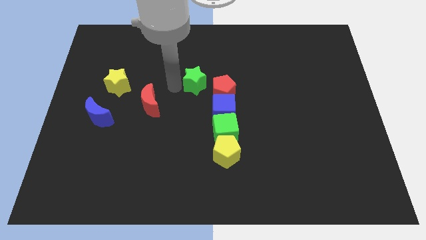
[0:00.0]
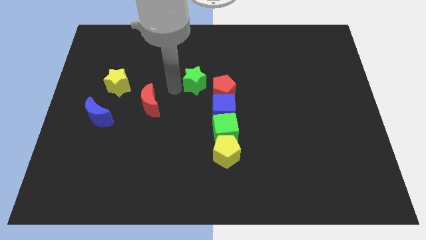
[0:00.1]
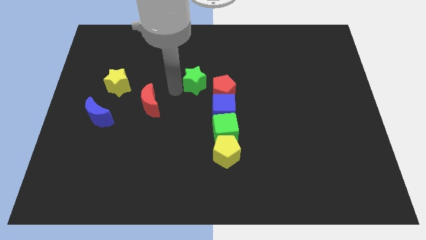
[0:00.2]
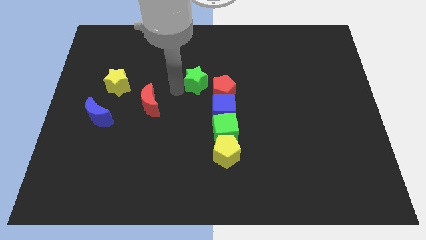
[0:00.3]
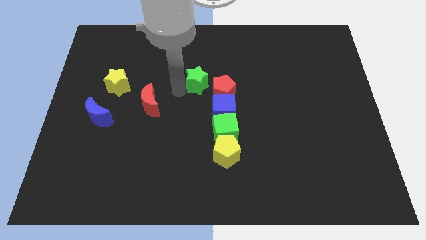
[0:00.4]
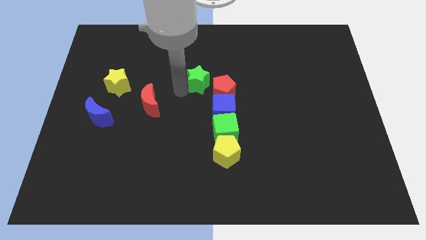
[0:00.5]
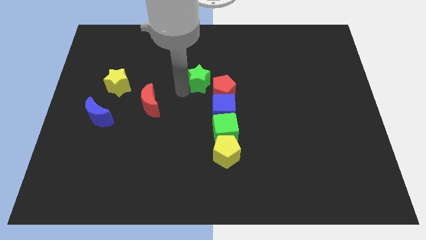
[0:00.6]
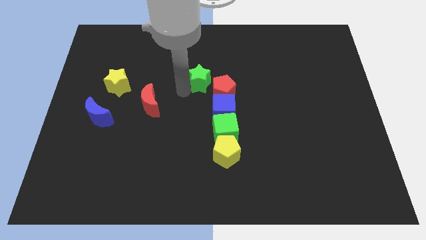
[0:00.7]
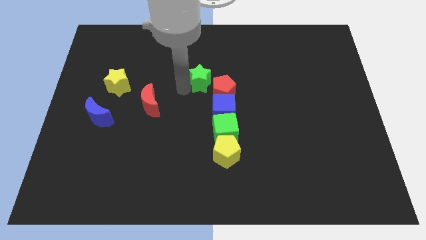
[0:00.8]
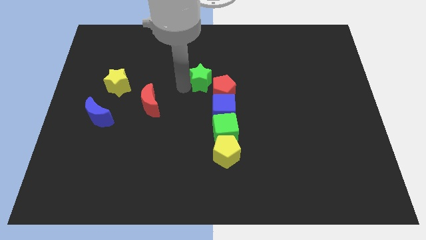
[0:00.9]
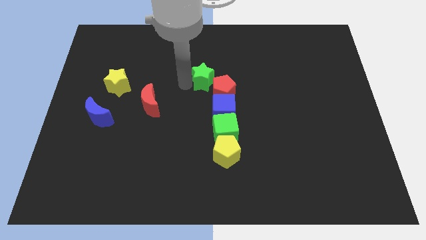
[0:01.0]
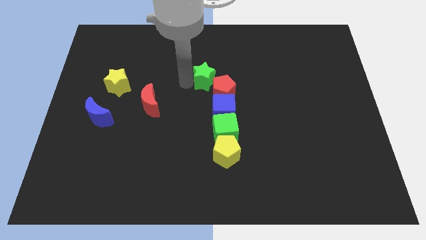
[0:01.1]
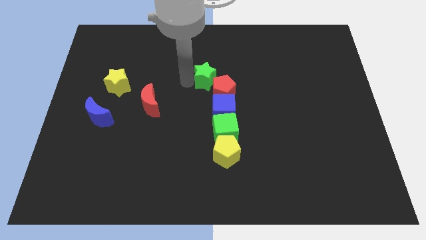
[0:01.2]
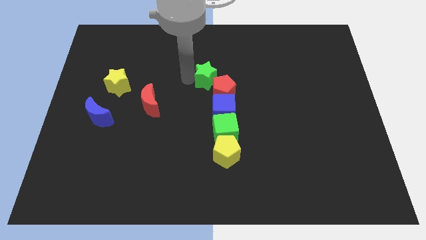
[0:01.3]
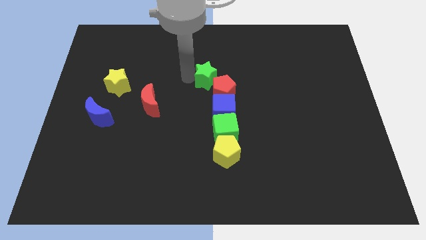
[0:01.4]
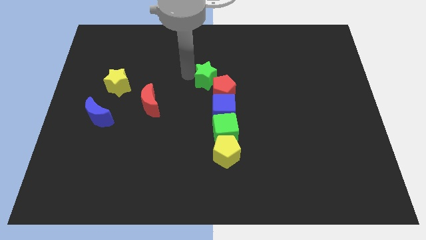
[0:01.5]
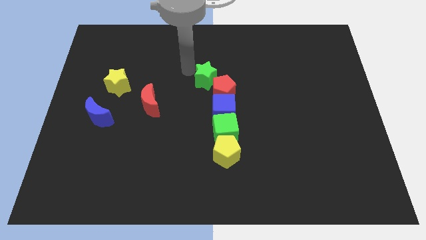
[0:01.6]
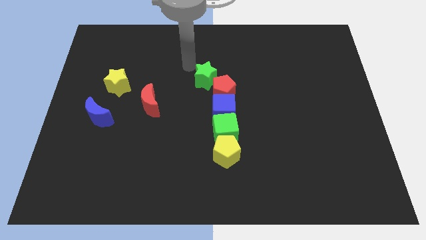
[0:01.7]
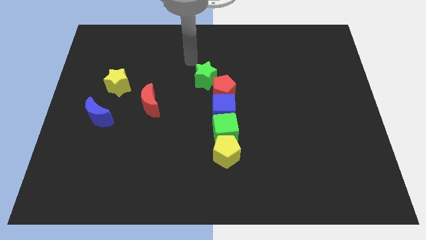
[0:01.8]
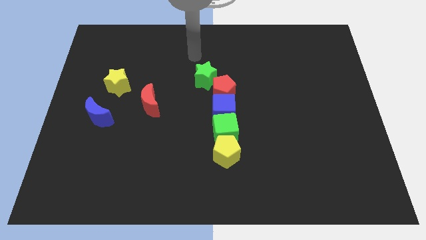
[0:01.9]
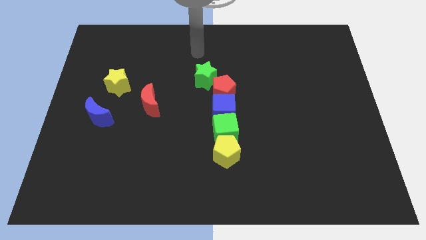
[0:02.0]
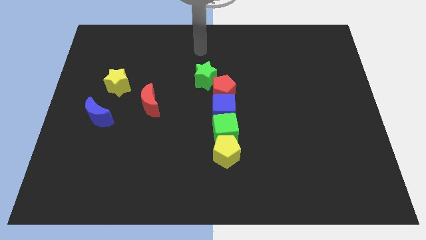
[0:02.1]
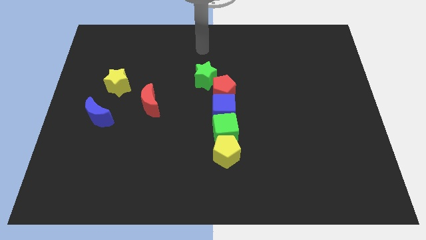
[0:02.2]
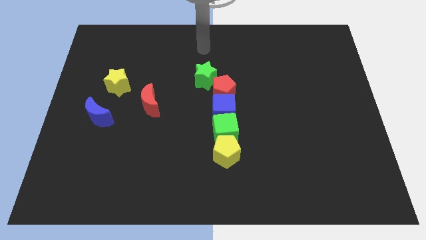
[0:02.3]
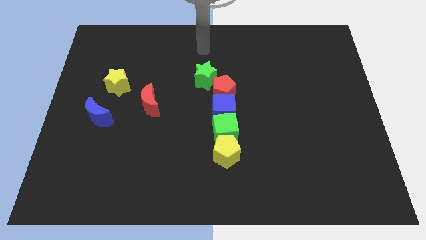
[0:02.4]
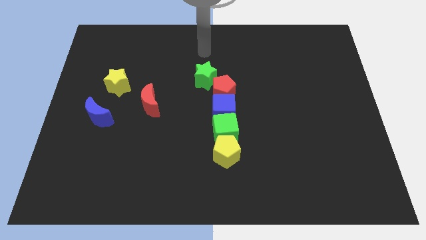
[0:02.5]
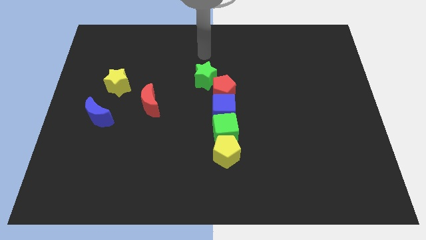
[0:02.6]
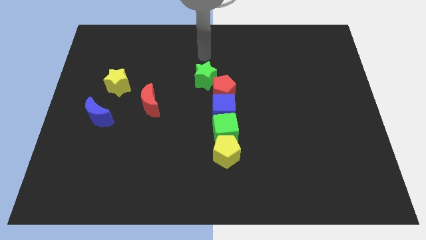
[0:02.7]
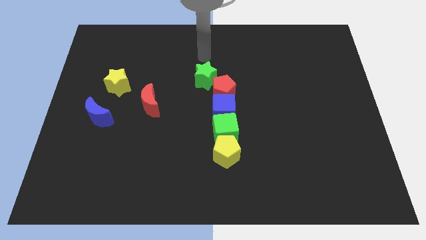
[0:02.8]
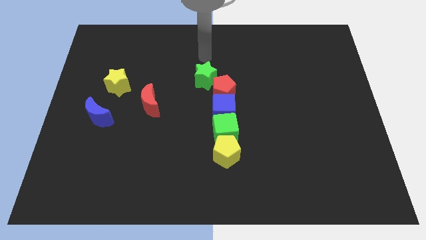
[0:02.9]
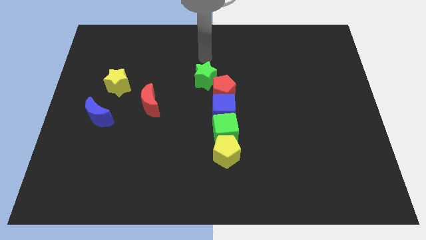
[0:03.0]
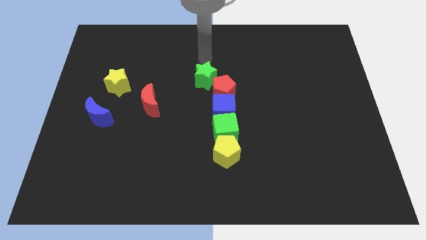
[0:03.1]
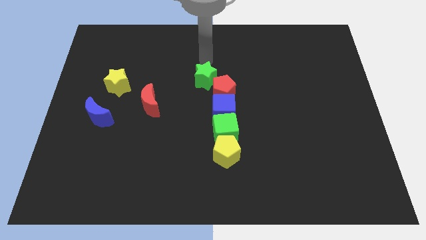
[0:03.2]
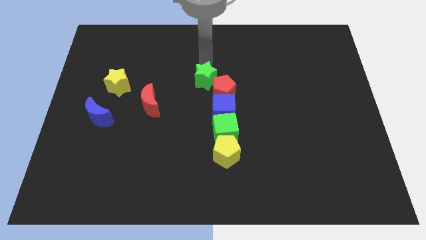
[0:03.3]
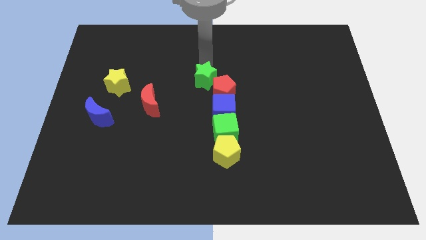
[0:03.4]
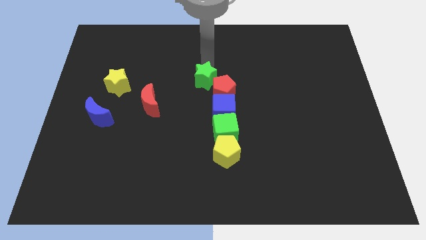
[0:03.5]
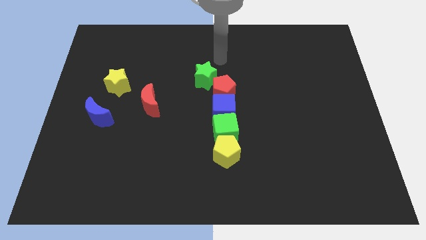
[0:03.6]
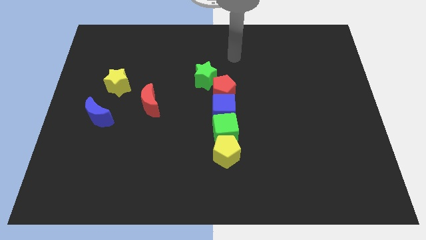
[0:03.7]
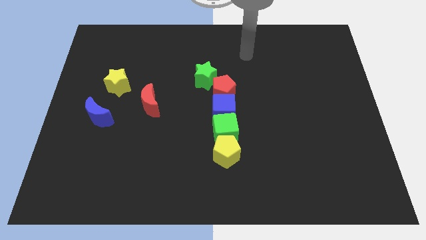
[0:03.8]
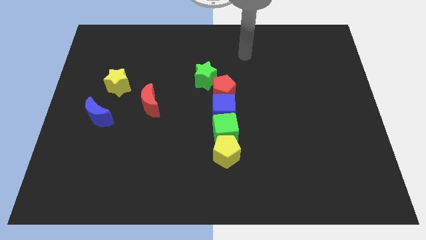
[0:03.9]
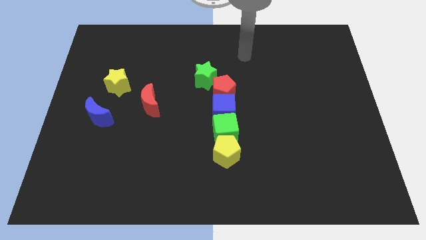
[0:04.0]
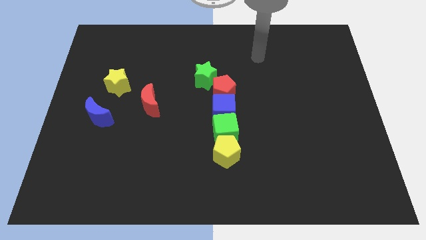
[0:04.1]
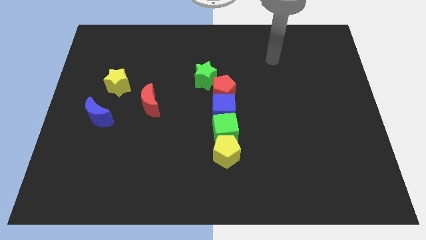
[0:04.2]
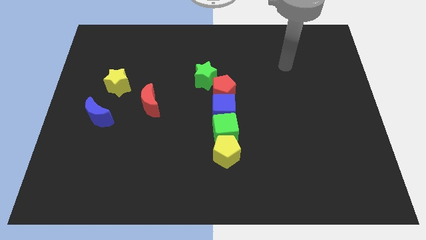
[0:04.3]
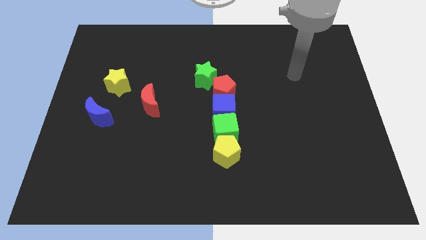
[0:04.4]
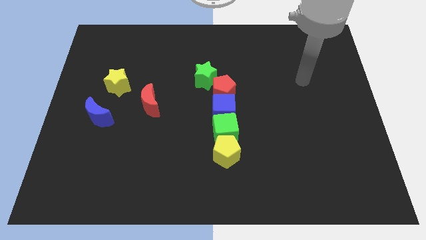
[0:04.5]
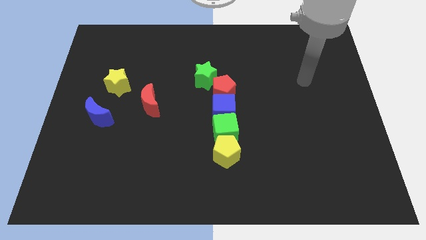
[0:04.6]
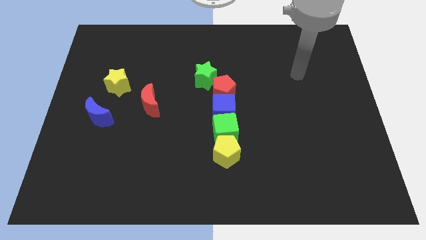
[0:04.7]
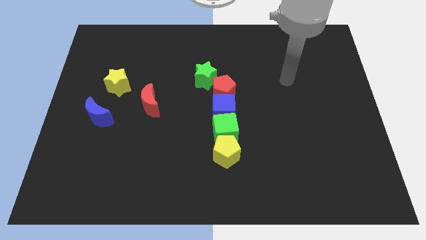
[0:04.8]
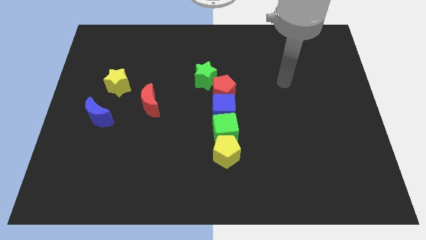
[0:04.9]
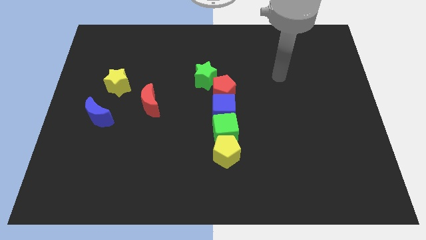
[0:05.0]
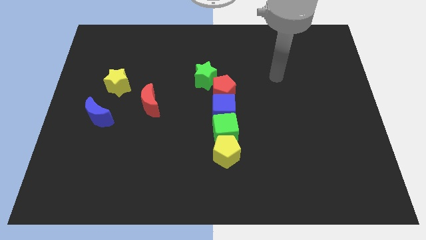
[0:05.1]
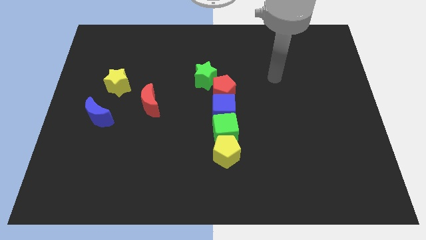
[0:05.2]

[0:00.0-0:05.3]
move your arm away from the green star

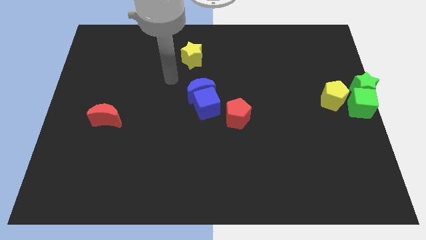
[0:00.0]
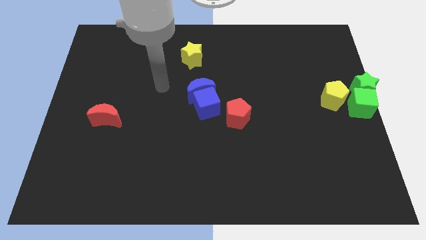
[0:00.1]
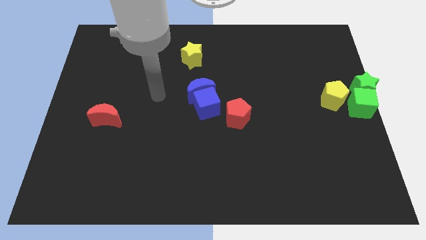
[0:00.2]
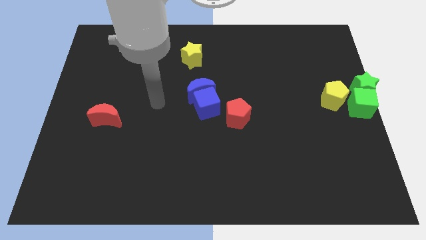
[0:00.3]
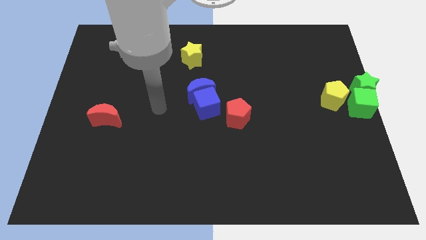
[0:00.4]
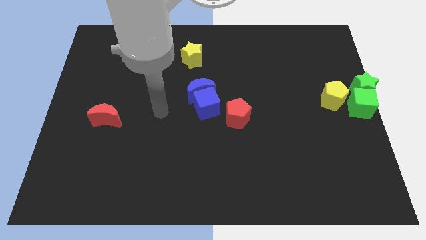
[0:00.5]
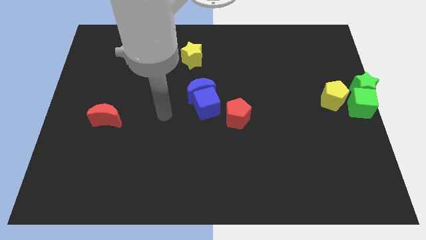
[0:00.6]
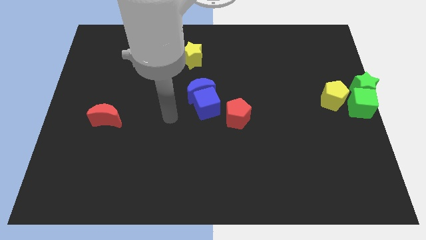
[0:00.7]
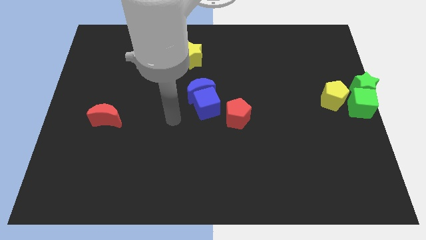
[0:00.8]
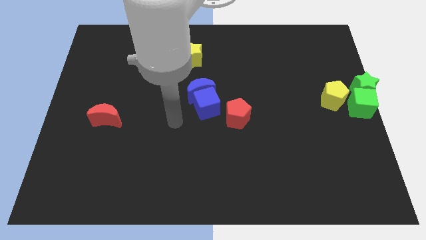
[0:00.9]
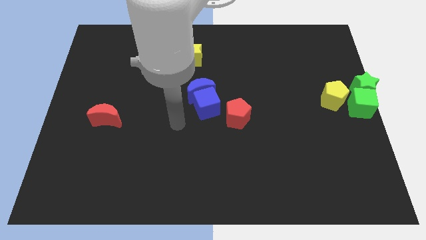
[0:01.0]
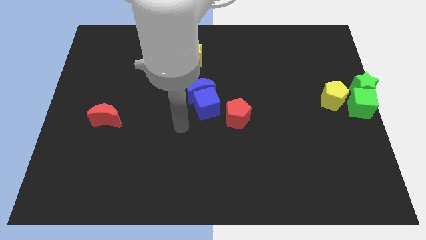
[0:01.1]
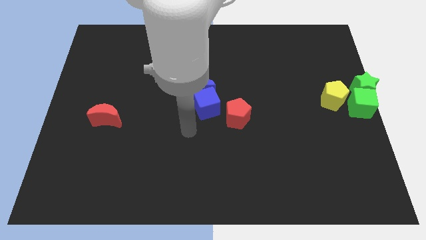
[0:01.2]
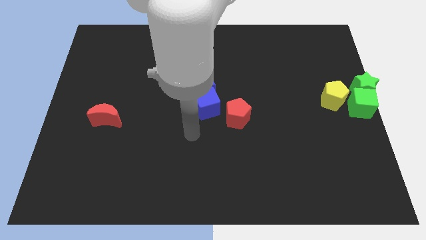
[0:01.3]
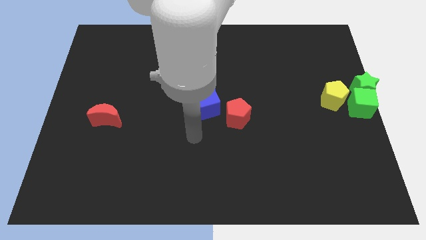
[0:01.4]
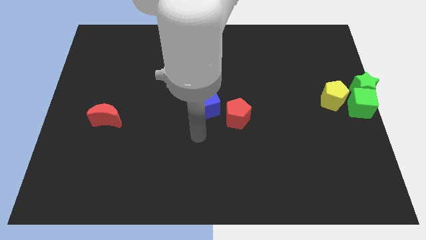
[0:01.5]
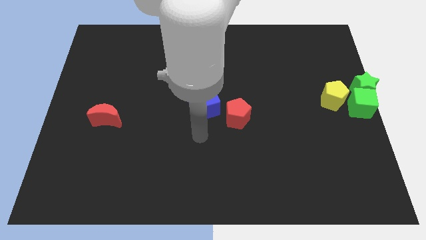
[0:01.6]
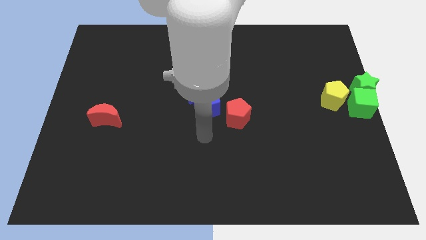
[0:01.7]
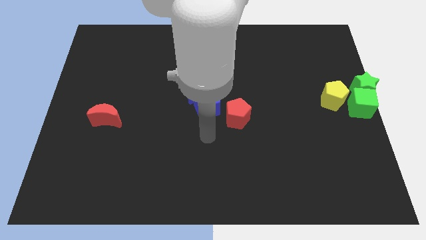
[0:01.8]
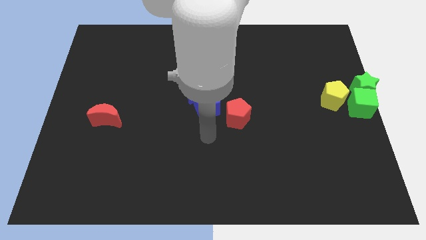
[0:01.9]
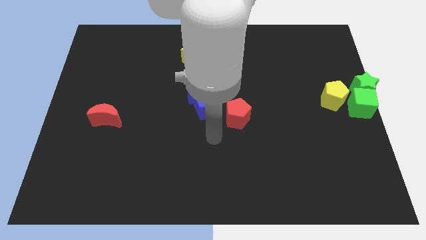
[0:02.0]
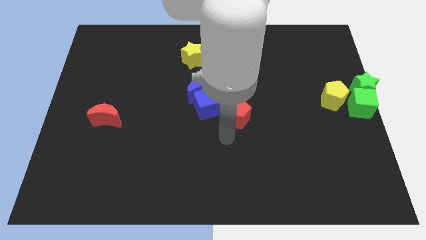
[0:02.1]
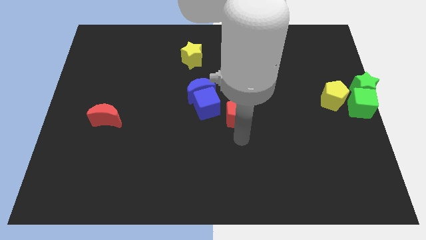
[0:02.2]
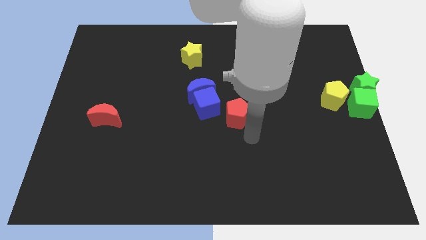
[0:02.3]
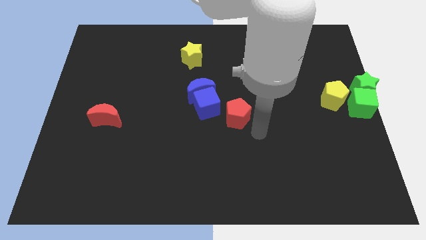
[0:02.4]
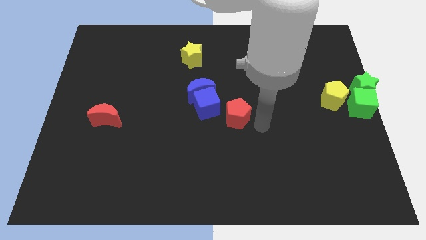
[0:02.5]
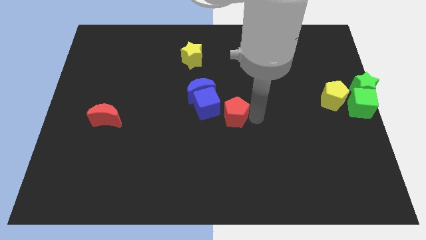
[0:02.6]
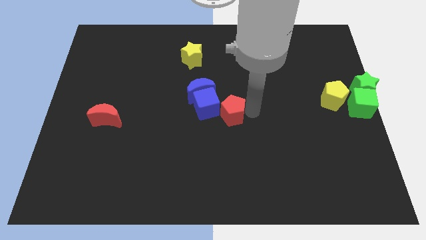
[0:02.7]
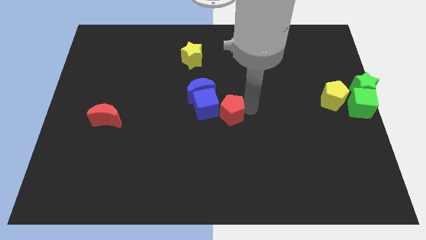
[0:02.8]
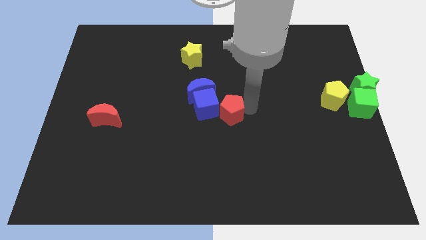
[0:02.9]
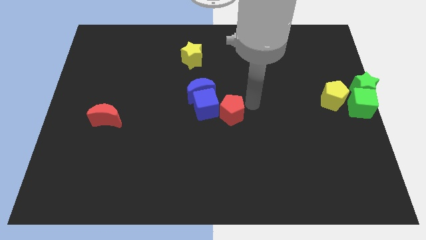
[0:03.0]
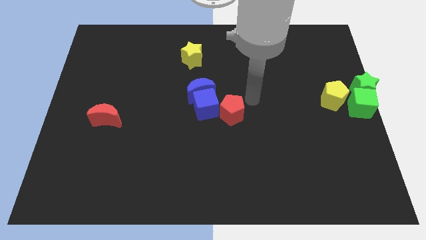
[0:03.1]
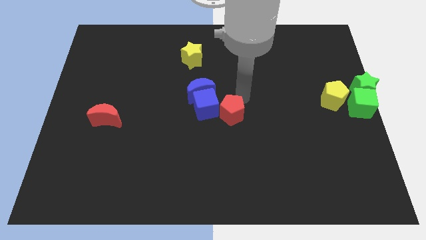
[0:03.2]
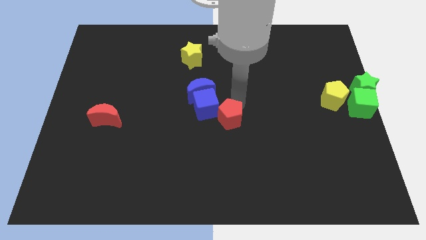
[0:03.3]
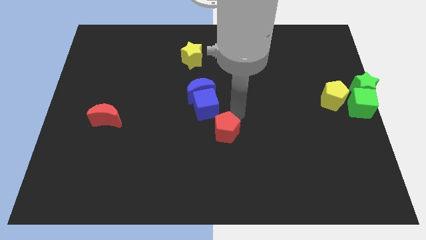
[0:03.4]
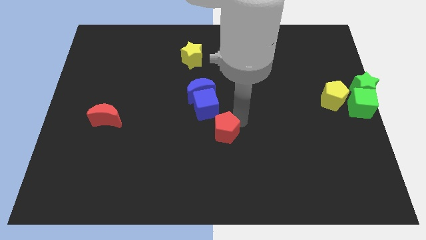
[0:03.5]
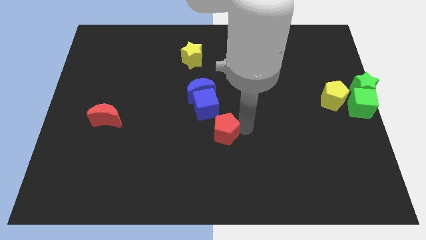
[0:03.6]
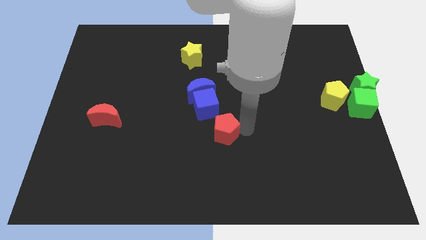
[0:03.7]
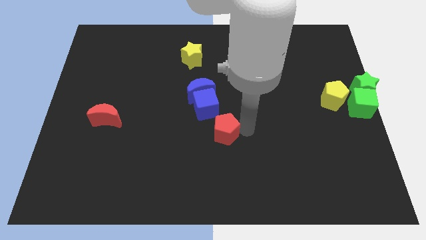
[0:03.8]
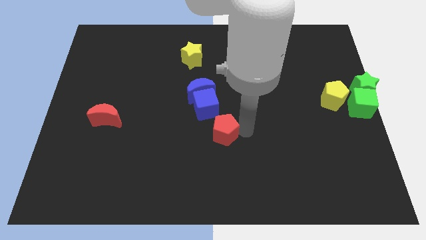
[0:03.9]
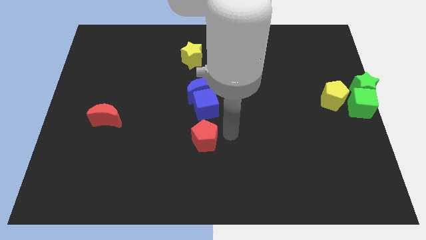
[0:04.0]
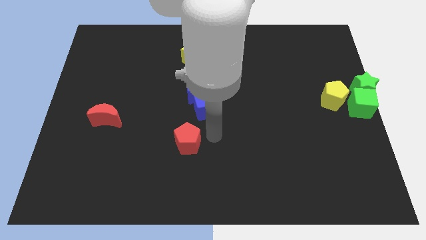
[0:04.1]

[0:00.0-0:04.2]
push the red pentagon to the bottom side of the blue cube
